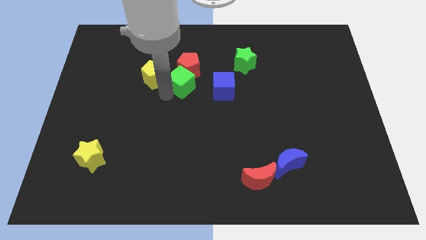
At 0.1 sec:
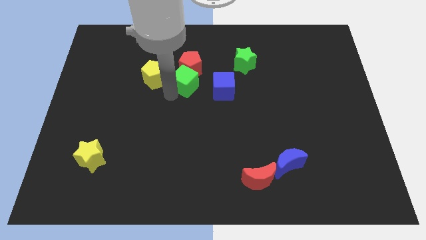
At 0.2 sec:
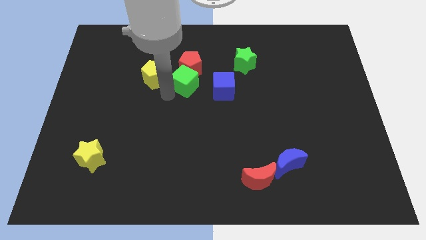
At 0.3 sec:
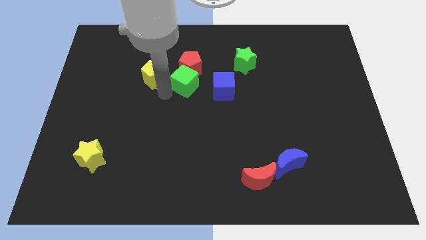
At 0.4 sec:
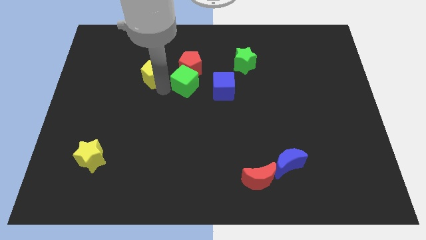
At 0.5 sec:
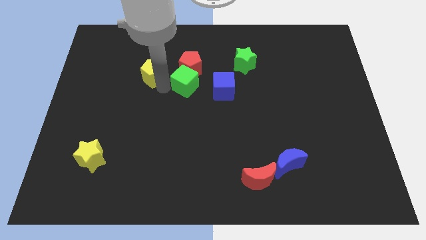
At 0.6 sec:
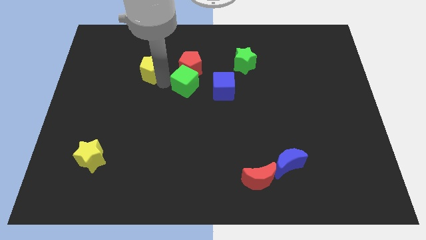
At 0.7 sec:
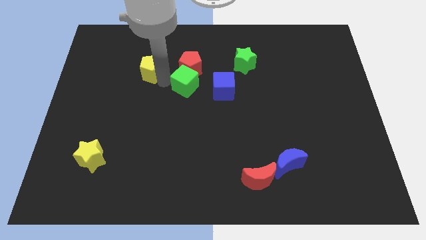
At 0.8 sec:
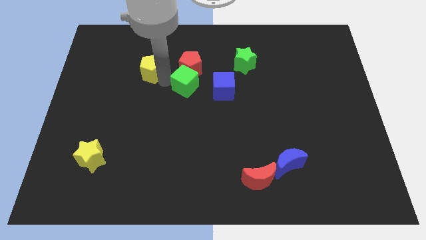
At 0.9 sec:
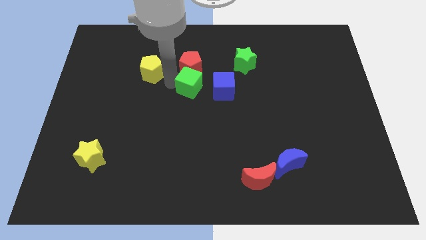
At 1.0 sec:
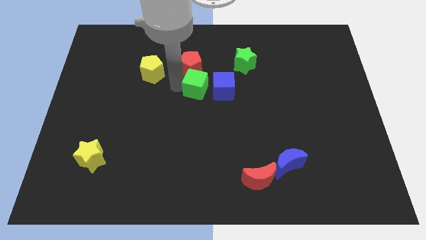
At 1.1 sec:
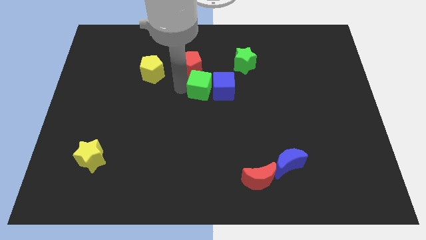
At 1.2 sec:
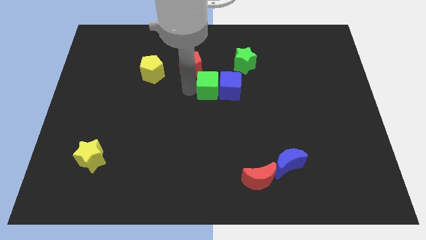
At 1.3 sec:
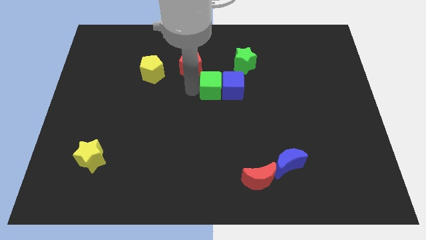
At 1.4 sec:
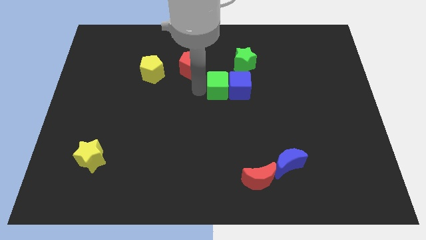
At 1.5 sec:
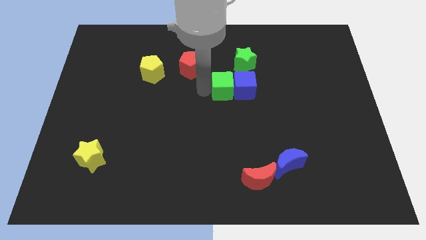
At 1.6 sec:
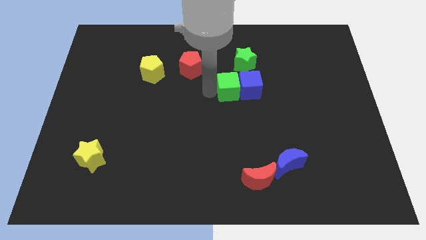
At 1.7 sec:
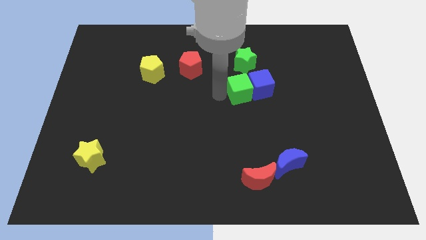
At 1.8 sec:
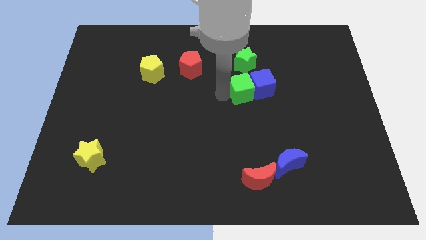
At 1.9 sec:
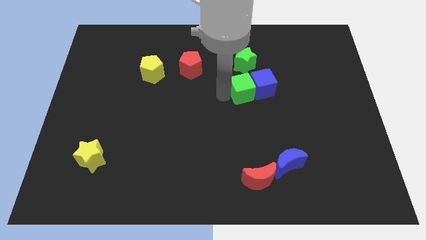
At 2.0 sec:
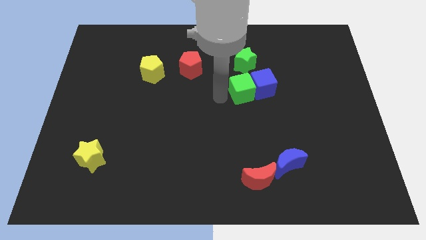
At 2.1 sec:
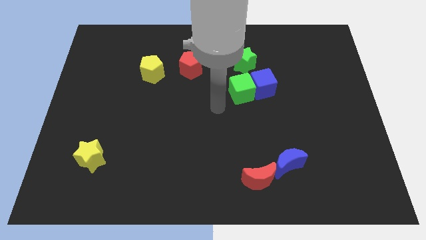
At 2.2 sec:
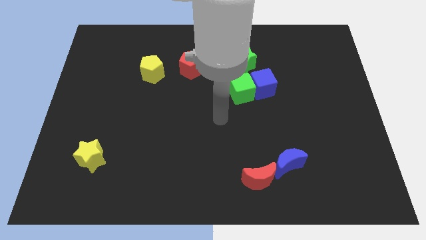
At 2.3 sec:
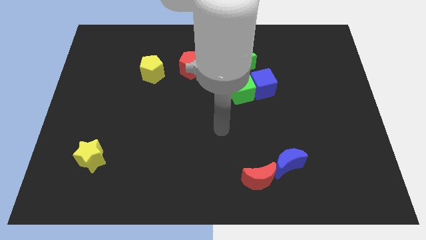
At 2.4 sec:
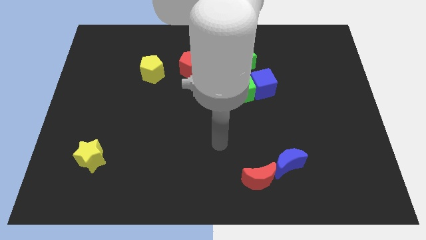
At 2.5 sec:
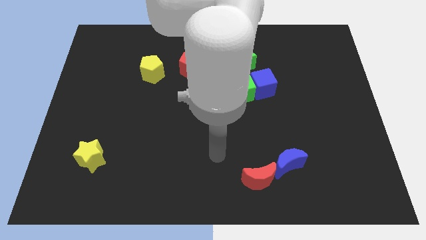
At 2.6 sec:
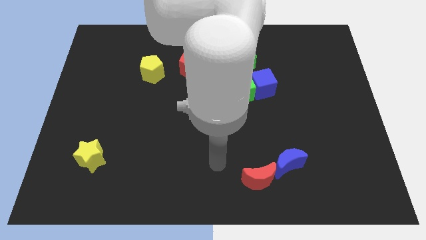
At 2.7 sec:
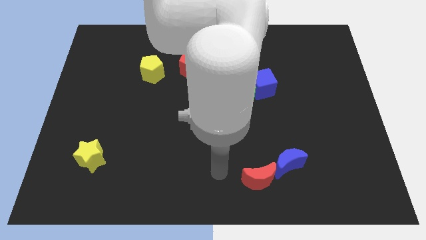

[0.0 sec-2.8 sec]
move the green cube and the blue cube slightly to teh right

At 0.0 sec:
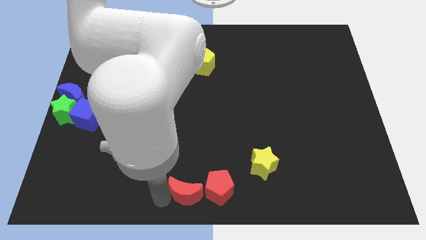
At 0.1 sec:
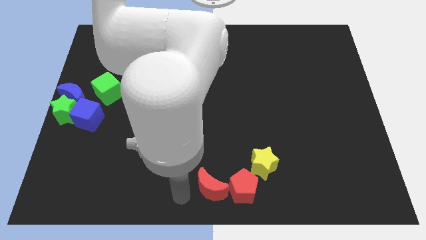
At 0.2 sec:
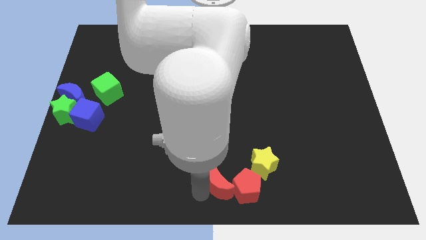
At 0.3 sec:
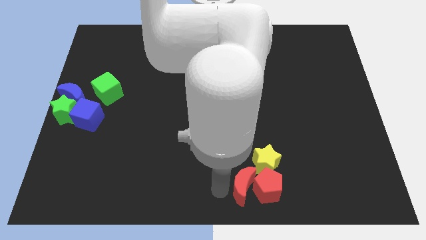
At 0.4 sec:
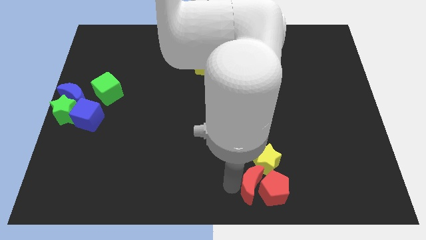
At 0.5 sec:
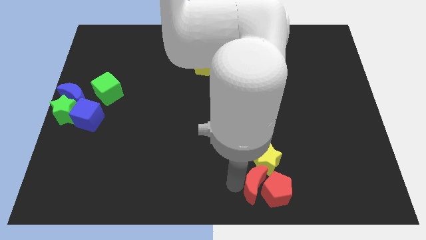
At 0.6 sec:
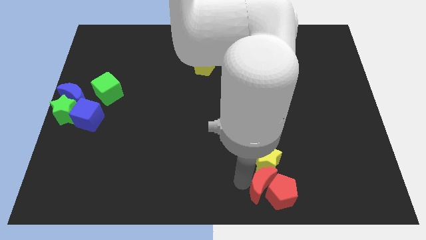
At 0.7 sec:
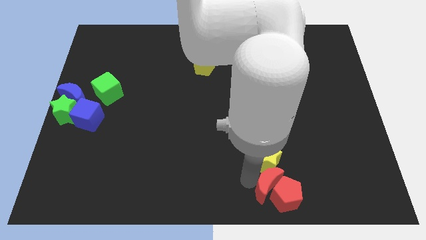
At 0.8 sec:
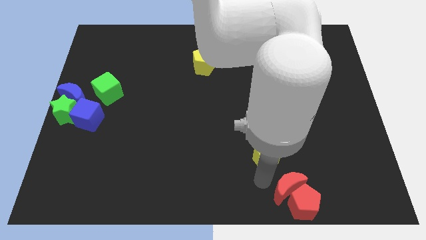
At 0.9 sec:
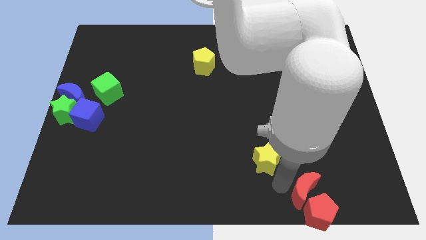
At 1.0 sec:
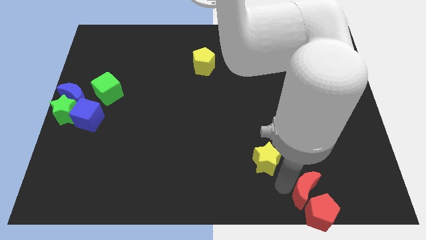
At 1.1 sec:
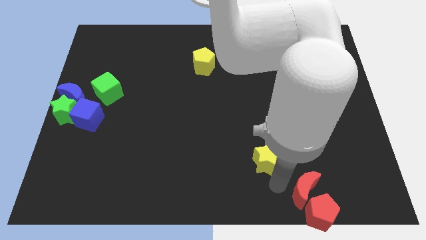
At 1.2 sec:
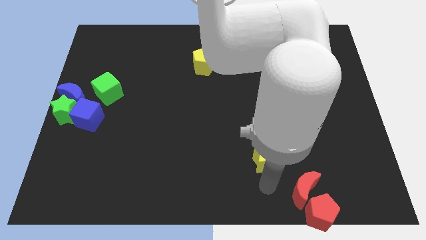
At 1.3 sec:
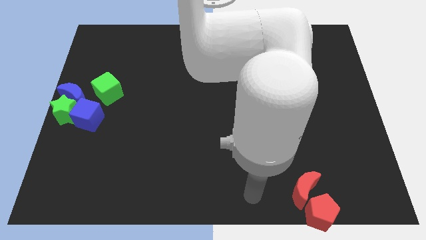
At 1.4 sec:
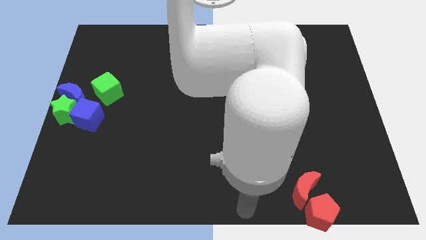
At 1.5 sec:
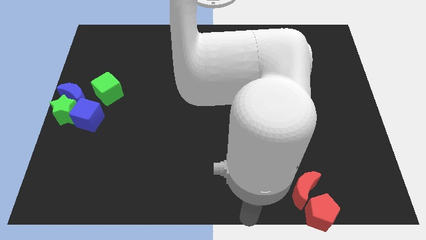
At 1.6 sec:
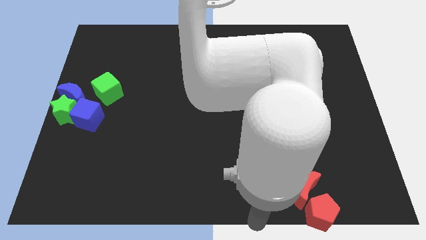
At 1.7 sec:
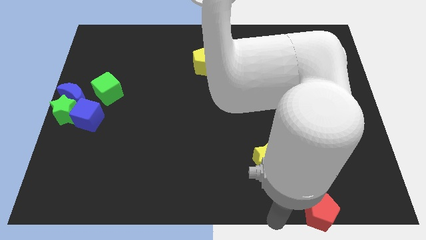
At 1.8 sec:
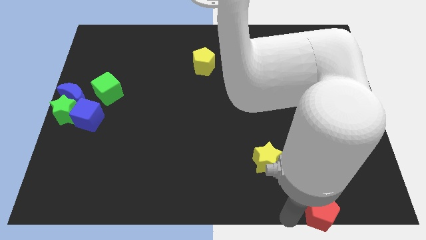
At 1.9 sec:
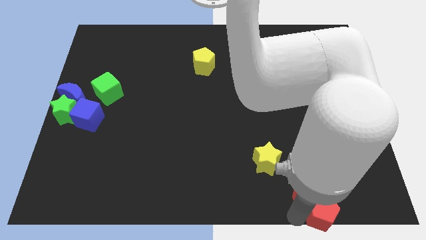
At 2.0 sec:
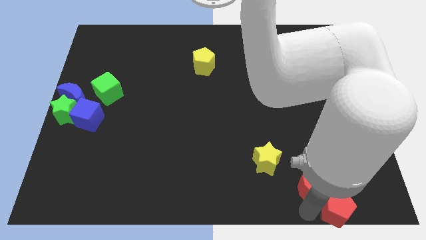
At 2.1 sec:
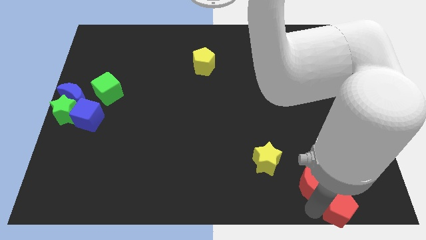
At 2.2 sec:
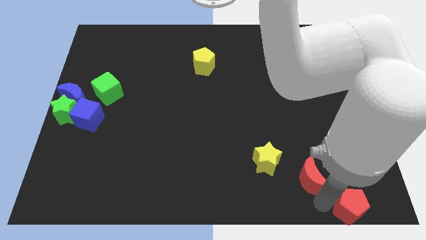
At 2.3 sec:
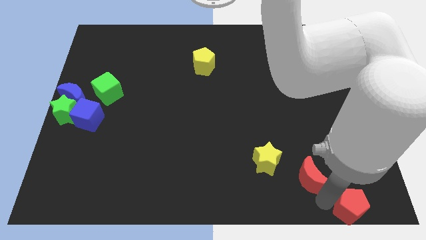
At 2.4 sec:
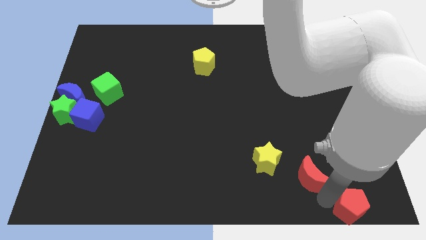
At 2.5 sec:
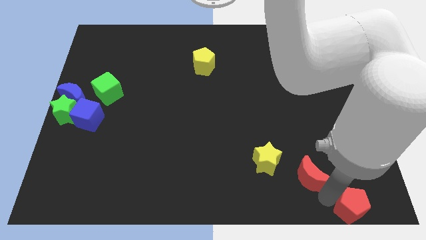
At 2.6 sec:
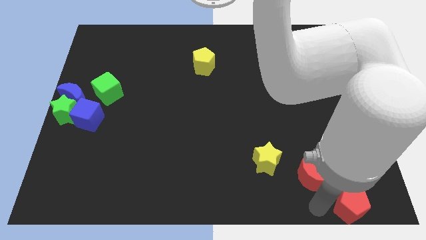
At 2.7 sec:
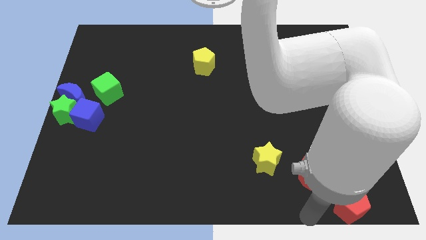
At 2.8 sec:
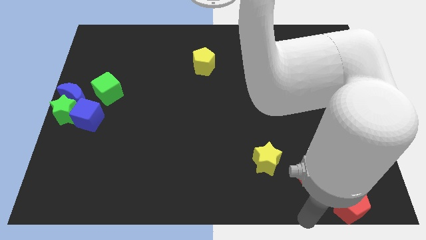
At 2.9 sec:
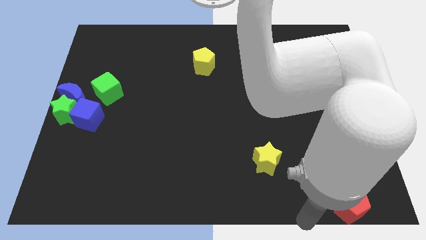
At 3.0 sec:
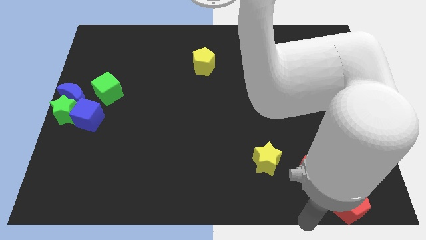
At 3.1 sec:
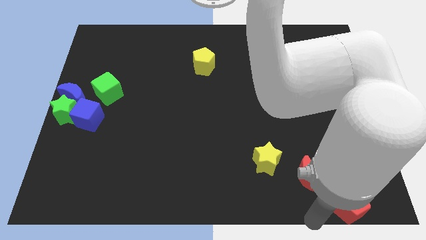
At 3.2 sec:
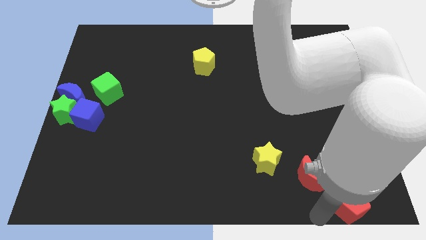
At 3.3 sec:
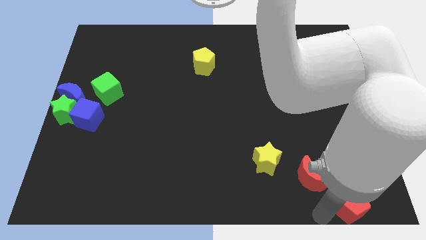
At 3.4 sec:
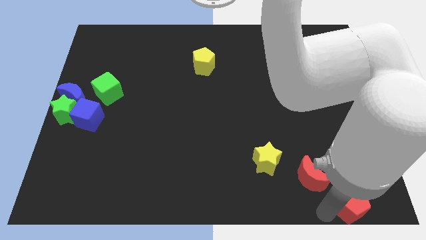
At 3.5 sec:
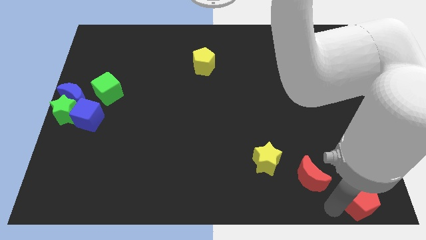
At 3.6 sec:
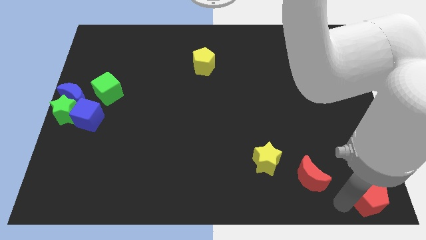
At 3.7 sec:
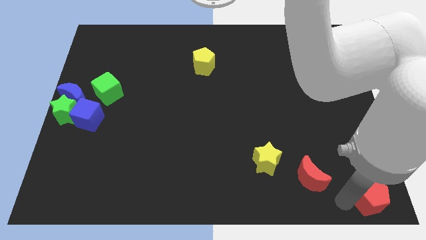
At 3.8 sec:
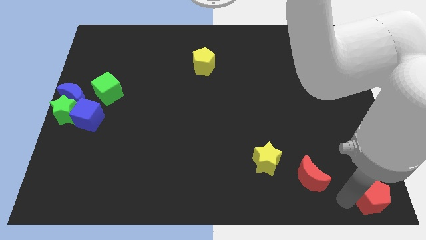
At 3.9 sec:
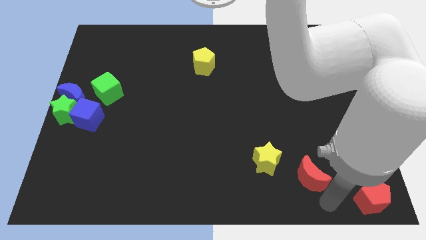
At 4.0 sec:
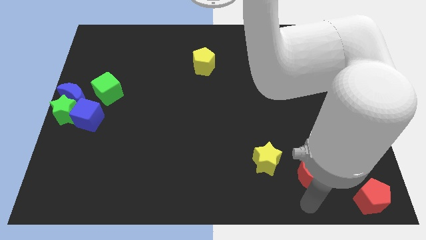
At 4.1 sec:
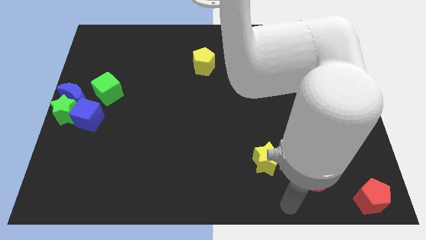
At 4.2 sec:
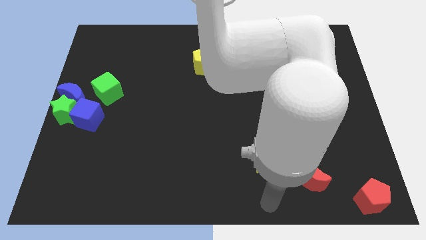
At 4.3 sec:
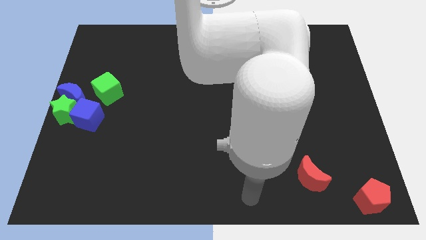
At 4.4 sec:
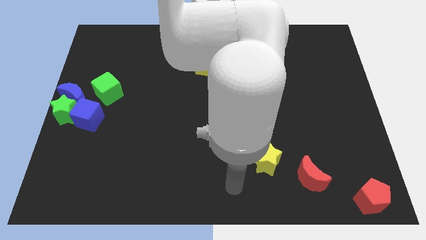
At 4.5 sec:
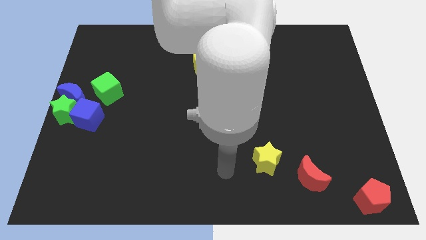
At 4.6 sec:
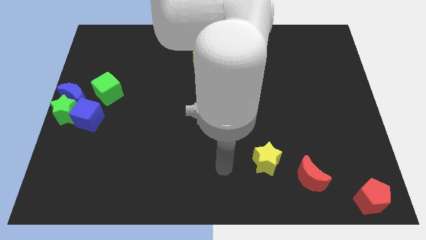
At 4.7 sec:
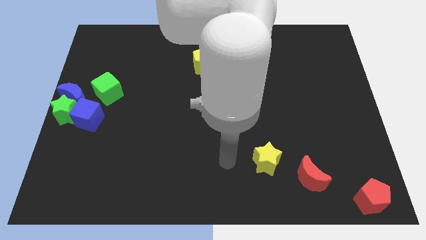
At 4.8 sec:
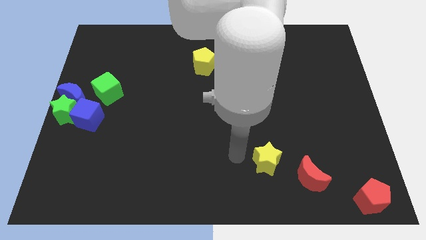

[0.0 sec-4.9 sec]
move red pentagon towards the bottom right corner of the board

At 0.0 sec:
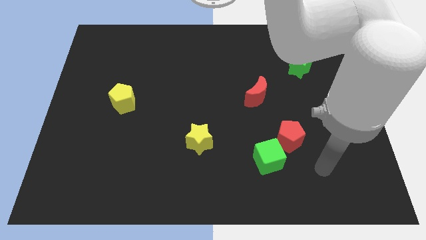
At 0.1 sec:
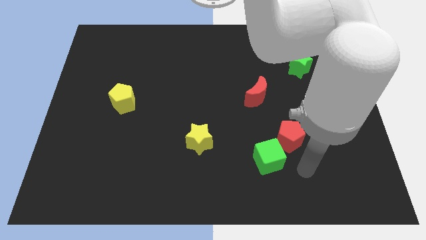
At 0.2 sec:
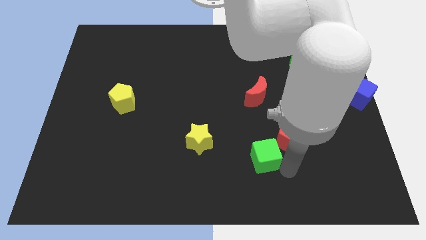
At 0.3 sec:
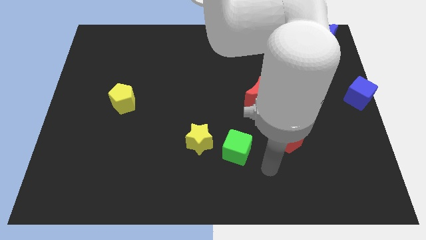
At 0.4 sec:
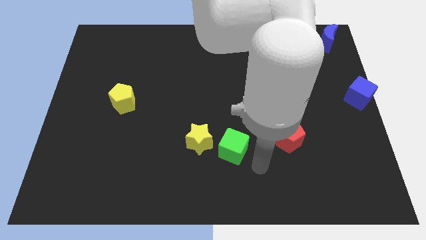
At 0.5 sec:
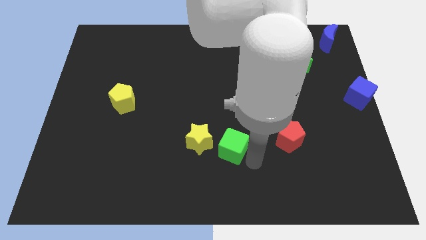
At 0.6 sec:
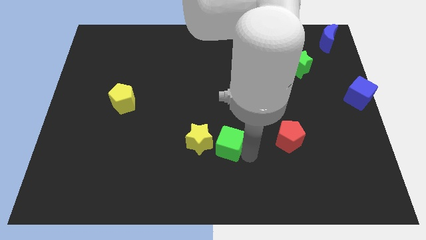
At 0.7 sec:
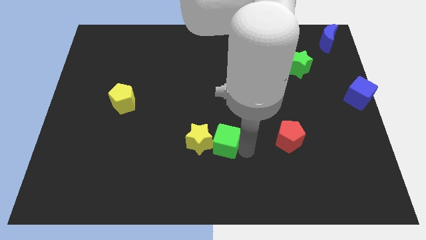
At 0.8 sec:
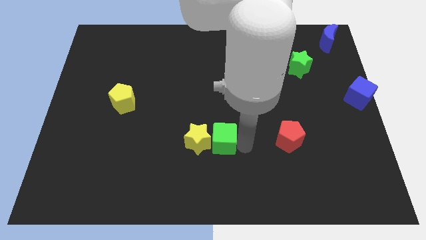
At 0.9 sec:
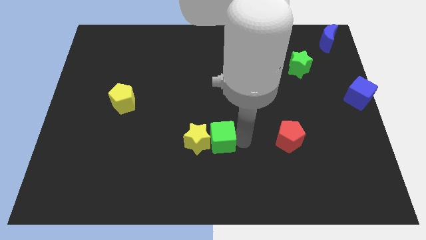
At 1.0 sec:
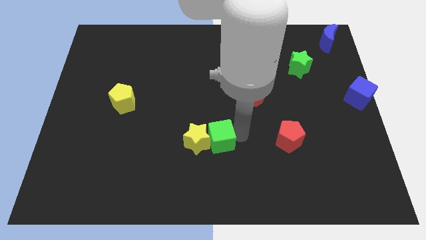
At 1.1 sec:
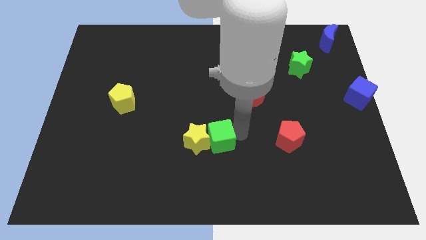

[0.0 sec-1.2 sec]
move the green cube to the right of the yellow star
